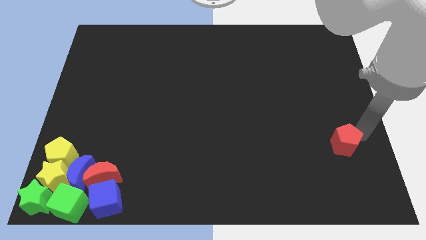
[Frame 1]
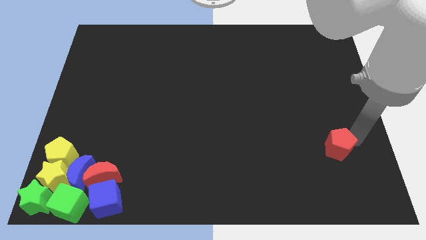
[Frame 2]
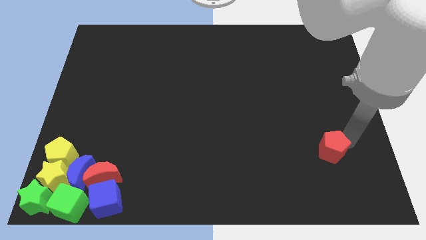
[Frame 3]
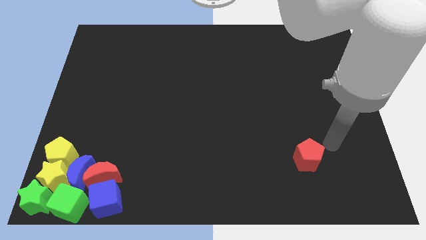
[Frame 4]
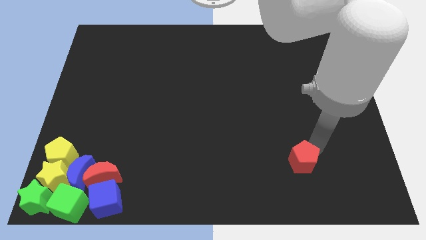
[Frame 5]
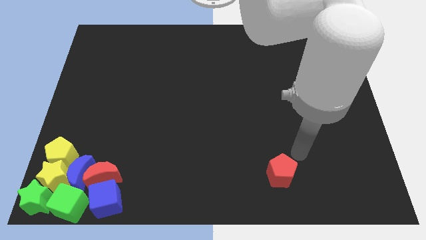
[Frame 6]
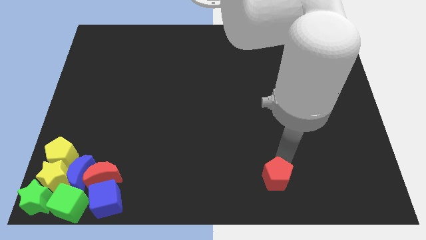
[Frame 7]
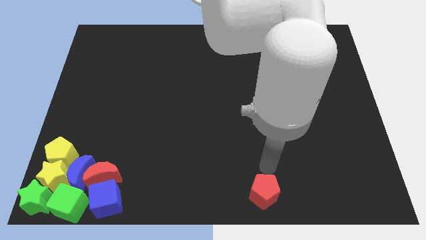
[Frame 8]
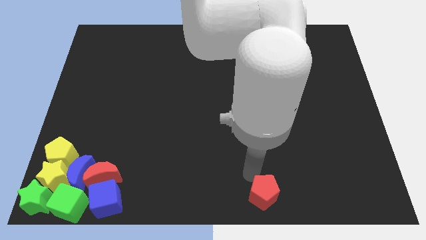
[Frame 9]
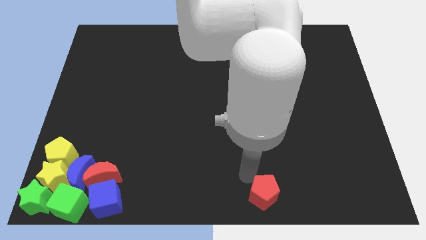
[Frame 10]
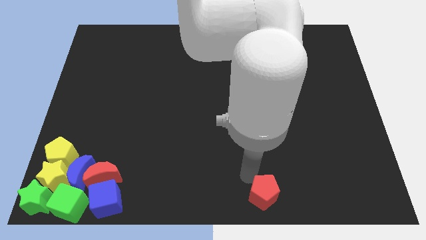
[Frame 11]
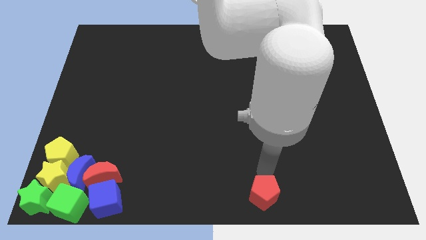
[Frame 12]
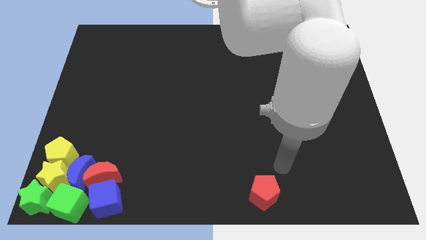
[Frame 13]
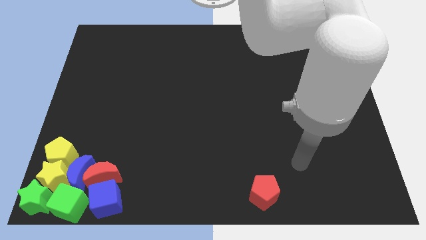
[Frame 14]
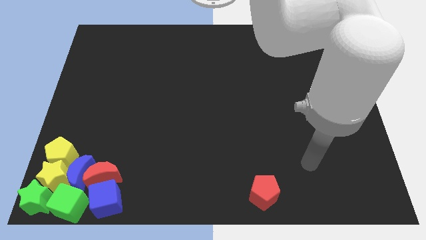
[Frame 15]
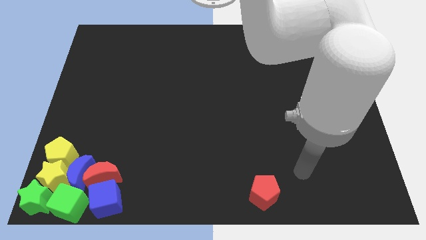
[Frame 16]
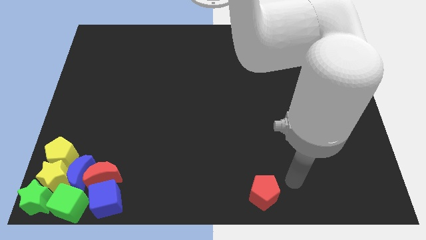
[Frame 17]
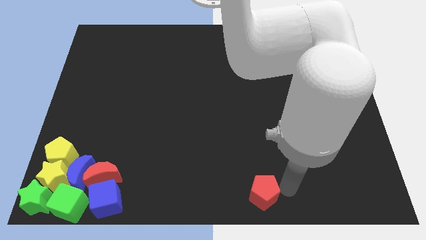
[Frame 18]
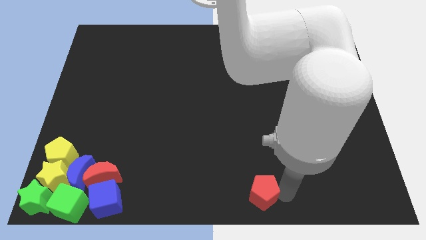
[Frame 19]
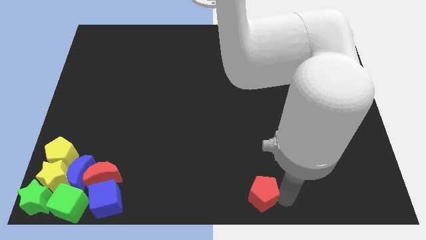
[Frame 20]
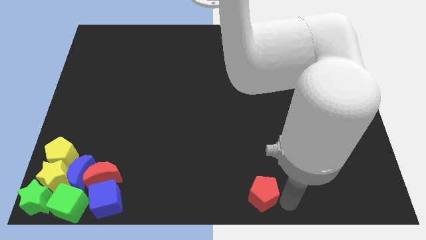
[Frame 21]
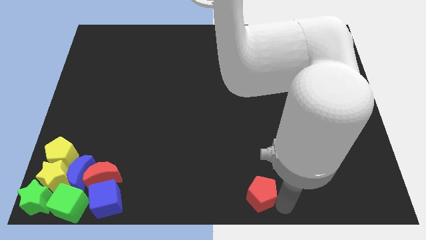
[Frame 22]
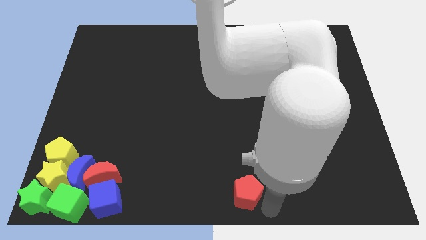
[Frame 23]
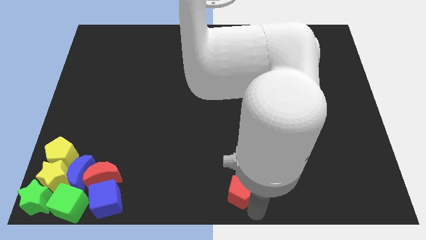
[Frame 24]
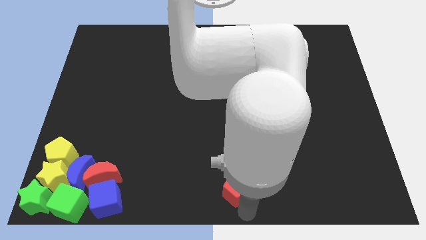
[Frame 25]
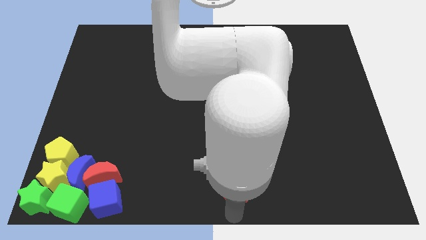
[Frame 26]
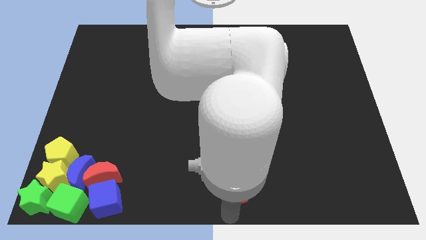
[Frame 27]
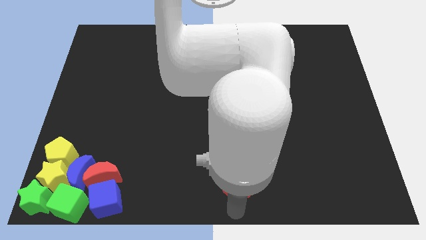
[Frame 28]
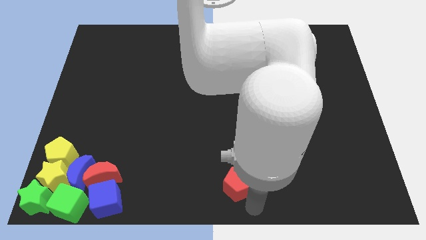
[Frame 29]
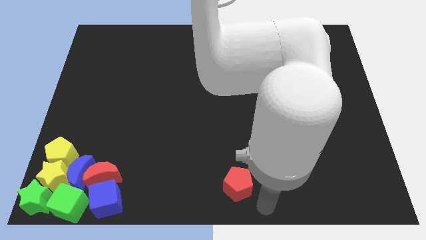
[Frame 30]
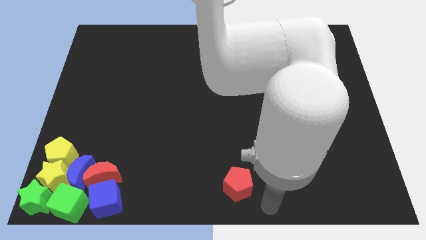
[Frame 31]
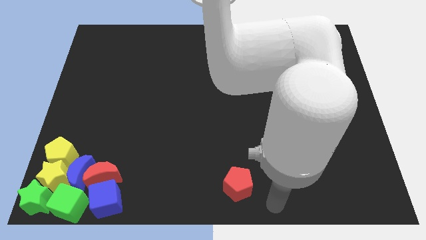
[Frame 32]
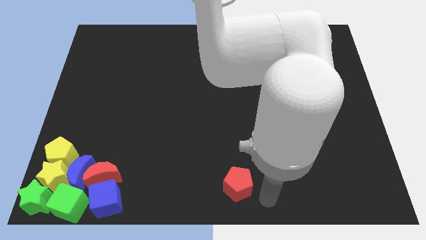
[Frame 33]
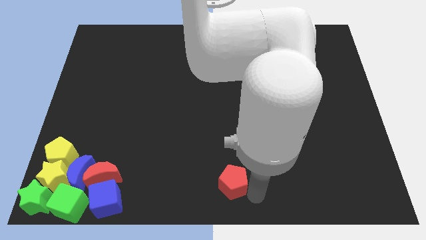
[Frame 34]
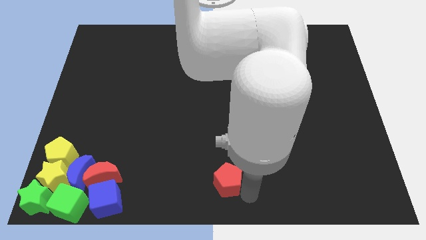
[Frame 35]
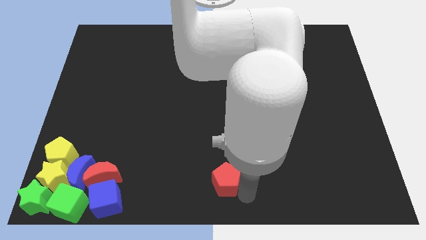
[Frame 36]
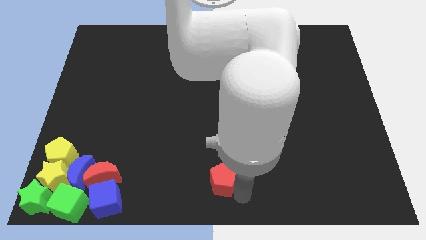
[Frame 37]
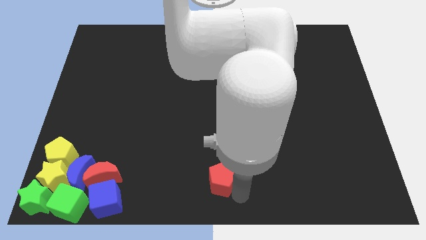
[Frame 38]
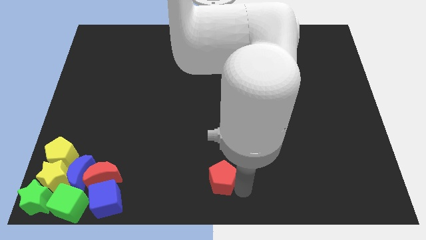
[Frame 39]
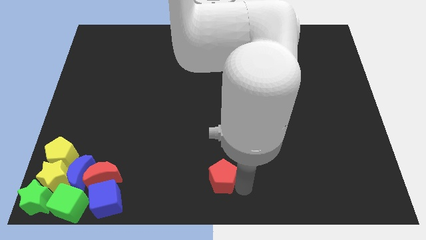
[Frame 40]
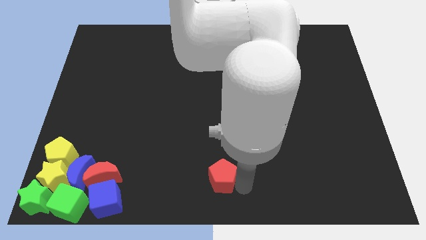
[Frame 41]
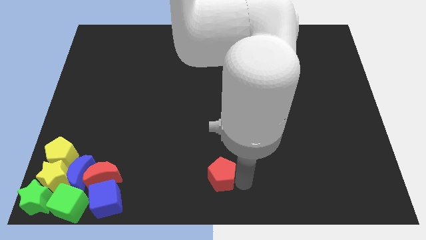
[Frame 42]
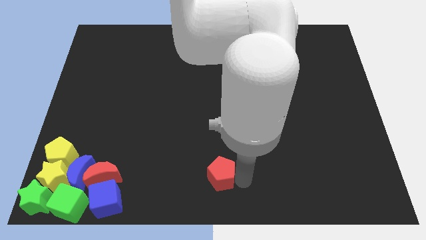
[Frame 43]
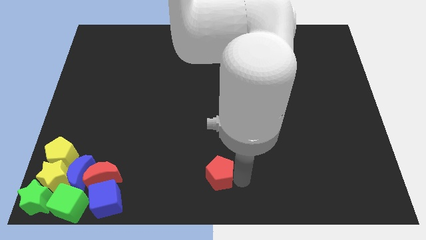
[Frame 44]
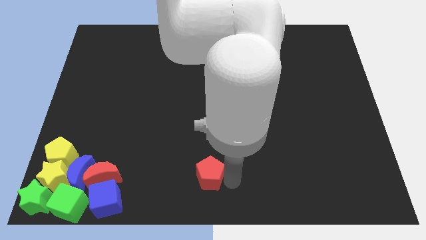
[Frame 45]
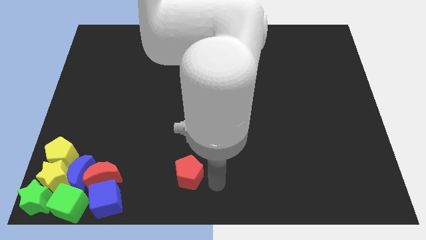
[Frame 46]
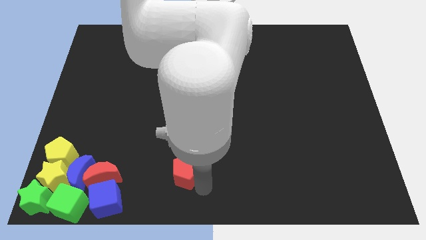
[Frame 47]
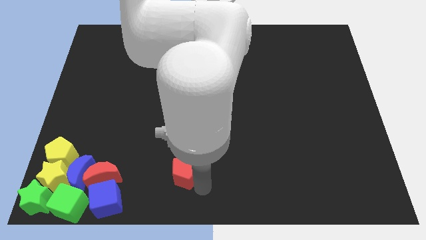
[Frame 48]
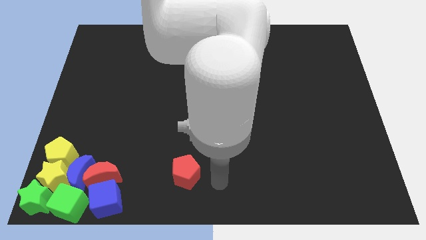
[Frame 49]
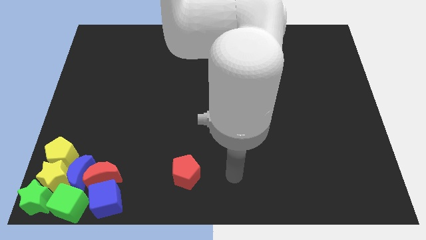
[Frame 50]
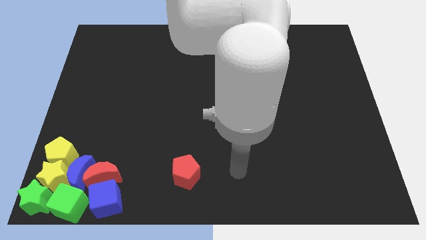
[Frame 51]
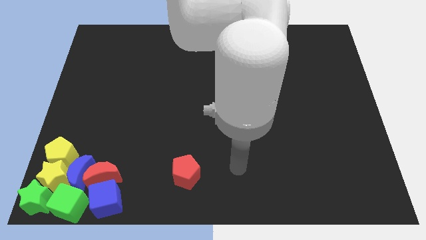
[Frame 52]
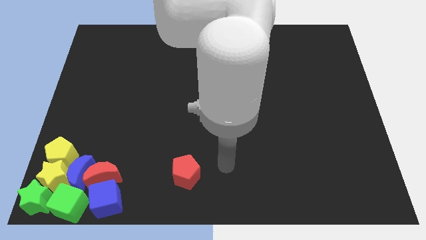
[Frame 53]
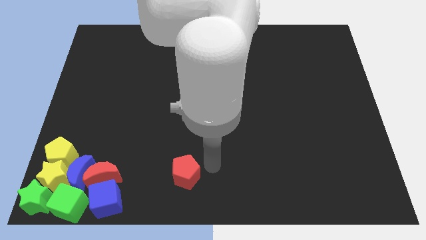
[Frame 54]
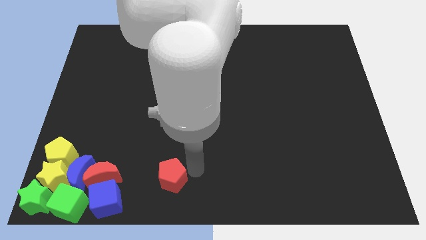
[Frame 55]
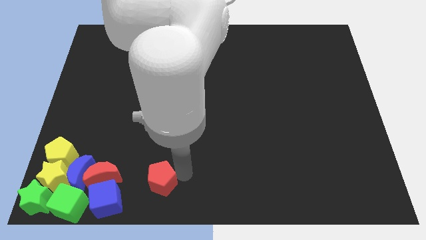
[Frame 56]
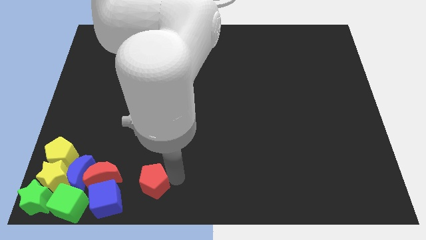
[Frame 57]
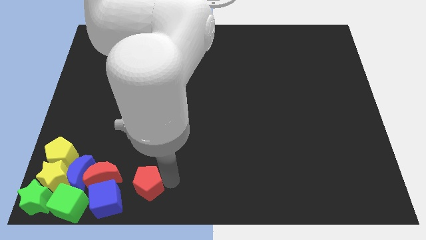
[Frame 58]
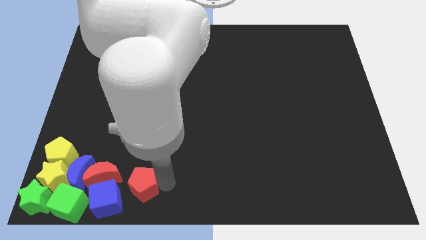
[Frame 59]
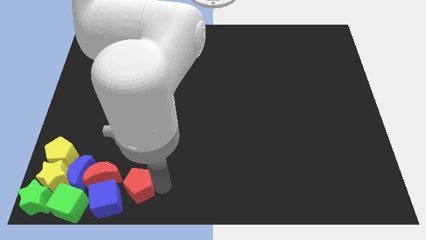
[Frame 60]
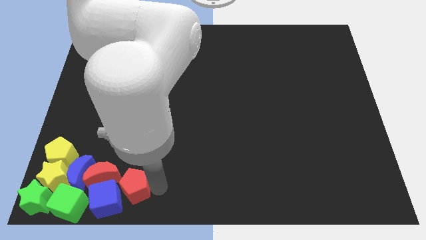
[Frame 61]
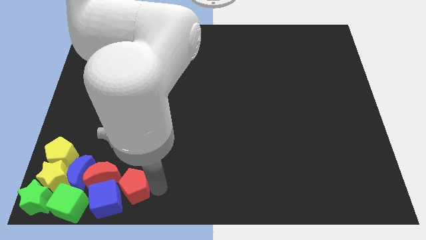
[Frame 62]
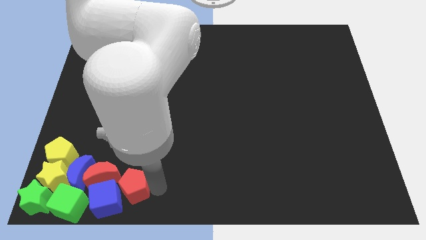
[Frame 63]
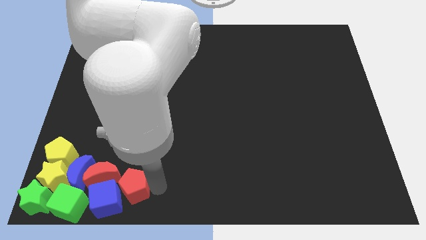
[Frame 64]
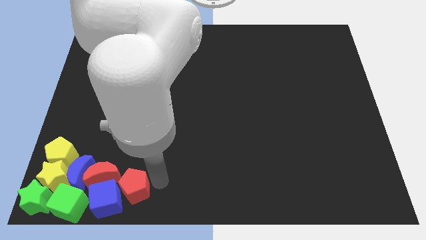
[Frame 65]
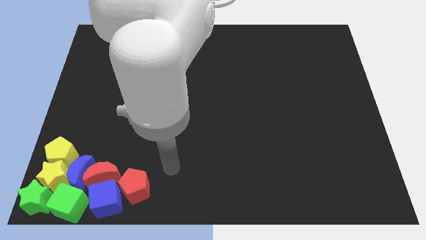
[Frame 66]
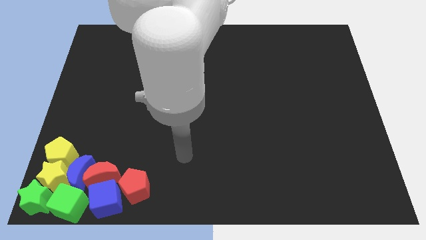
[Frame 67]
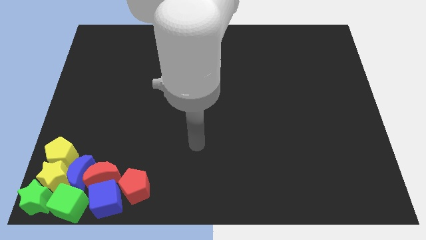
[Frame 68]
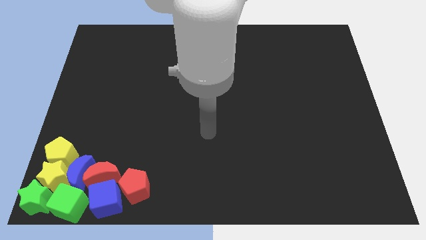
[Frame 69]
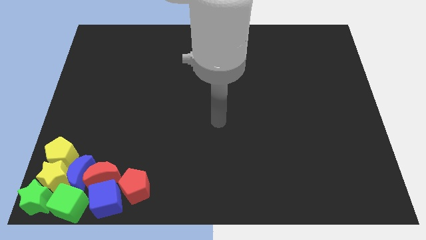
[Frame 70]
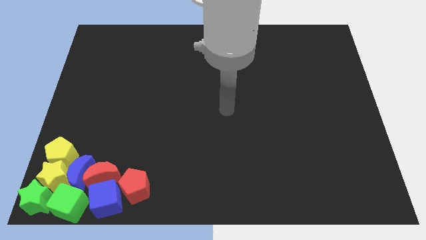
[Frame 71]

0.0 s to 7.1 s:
push the red pentagon into the group of blocks

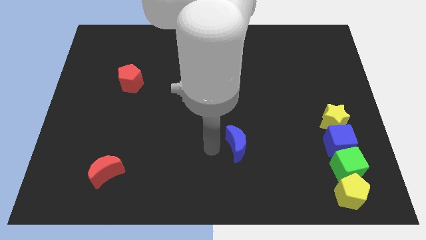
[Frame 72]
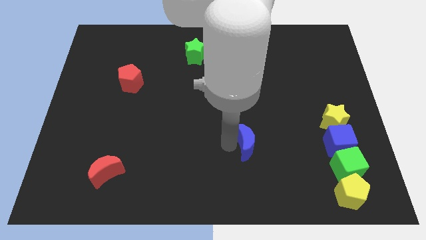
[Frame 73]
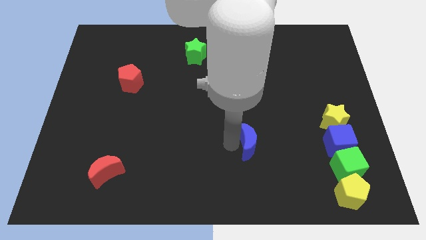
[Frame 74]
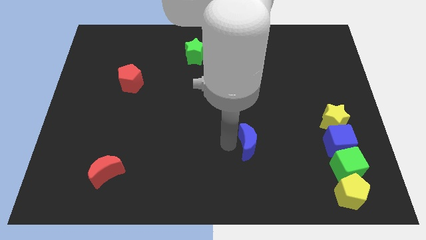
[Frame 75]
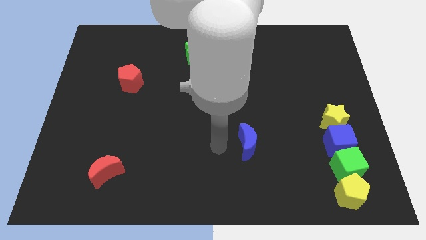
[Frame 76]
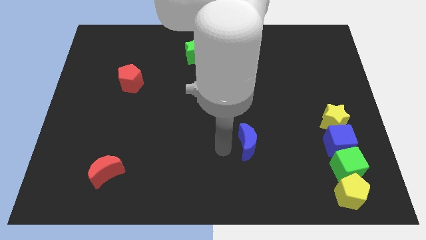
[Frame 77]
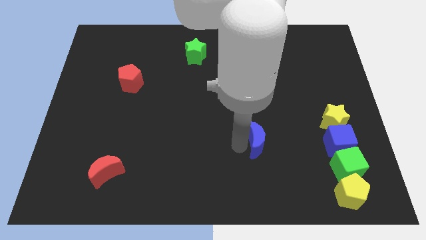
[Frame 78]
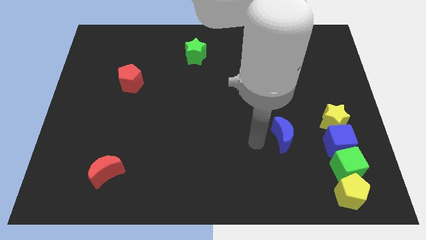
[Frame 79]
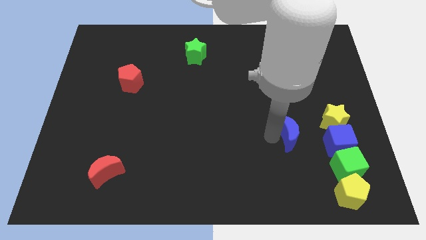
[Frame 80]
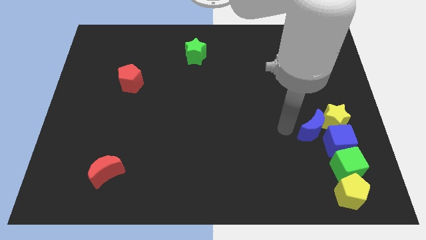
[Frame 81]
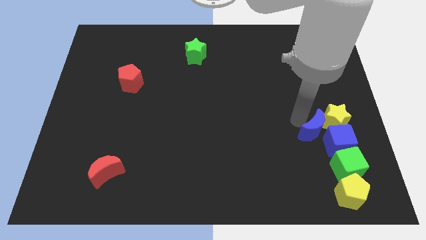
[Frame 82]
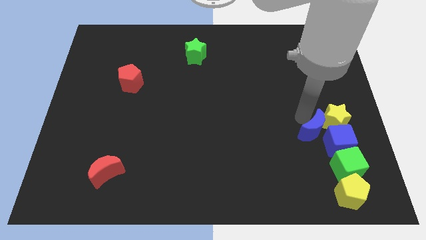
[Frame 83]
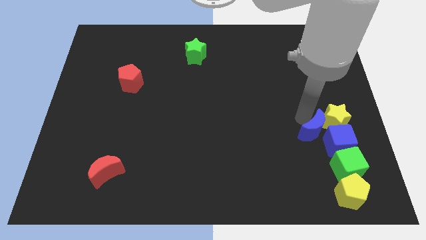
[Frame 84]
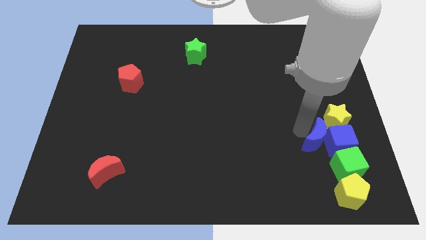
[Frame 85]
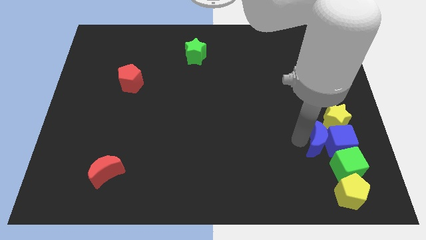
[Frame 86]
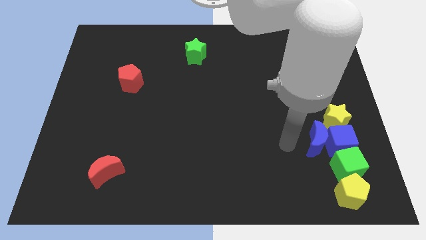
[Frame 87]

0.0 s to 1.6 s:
move the blue crescent into the blue cube

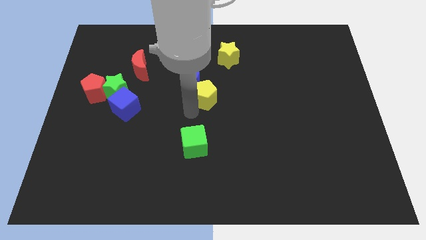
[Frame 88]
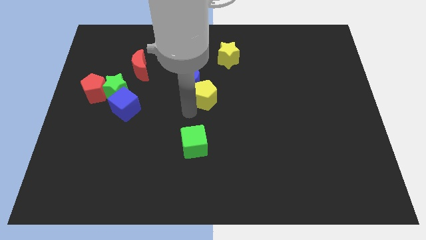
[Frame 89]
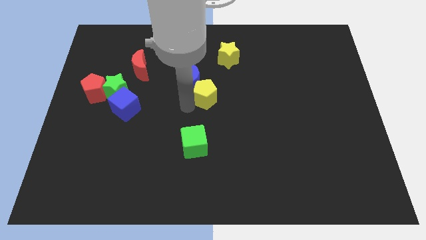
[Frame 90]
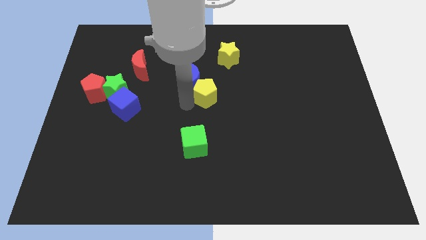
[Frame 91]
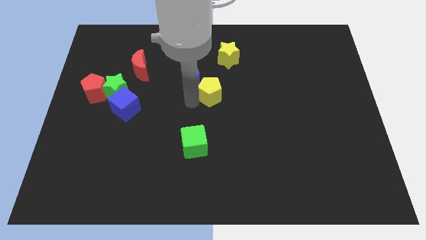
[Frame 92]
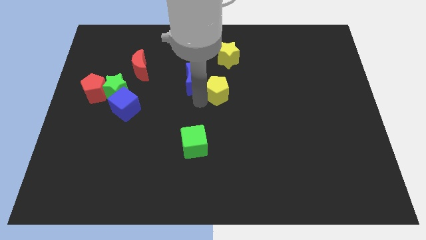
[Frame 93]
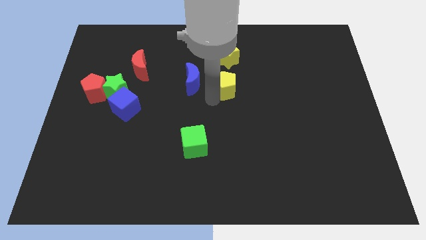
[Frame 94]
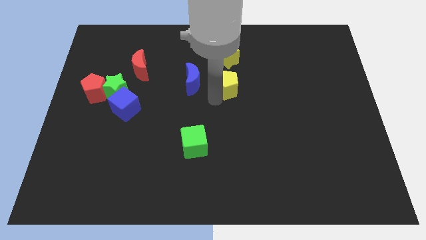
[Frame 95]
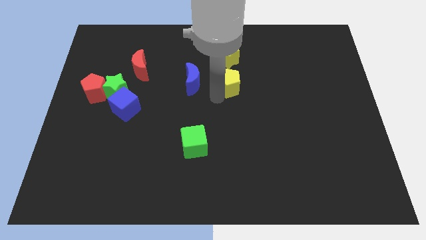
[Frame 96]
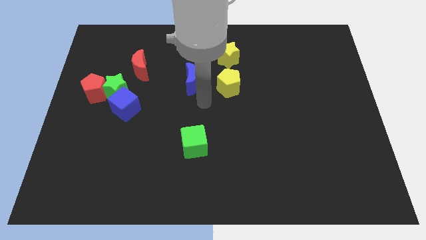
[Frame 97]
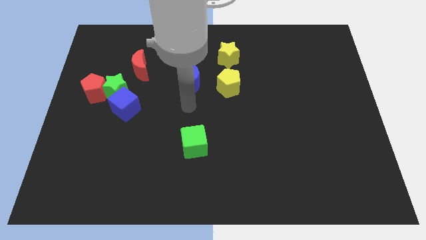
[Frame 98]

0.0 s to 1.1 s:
place yellow pentagon below yellow star
